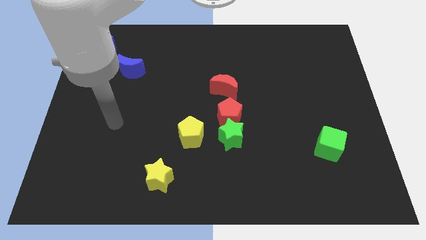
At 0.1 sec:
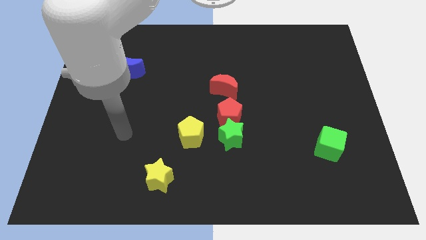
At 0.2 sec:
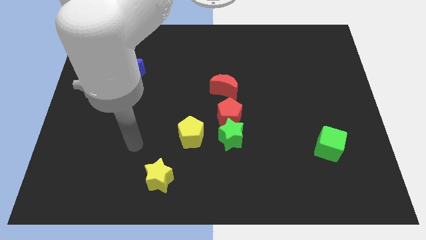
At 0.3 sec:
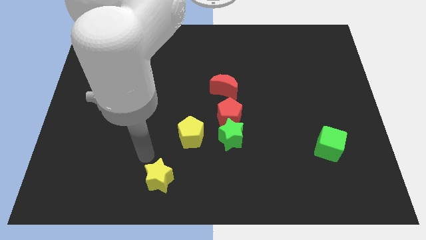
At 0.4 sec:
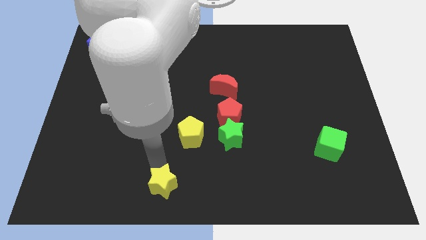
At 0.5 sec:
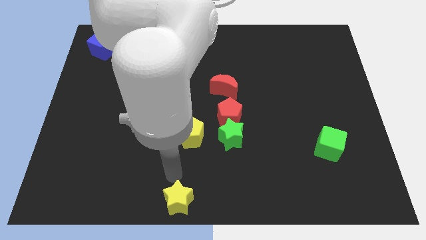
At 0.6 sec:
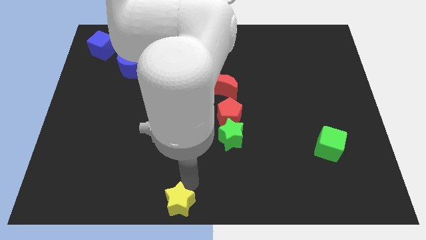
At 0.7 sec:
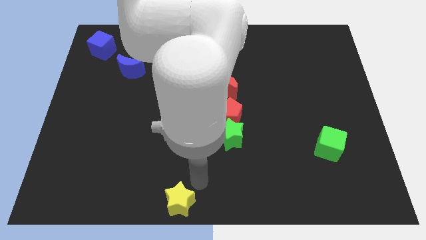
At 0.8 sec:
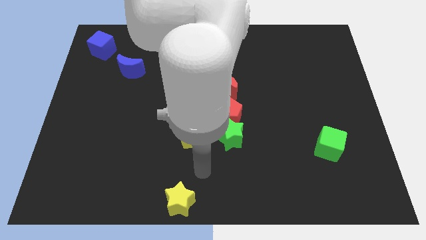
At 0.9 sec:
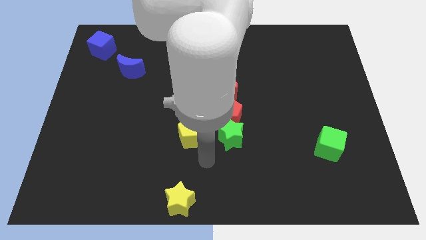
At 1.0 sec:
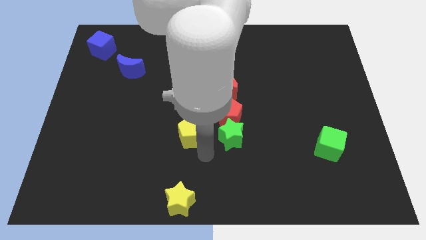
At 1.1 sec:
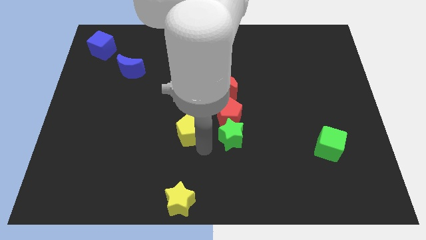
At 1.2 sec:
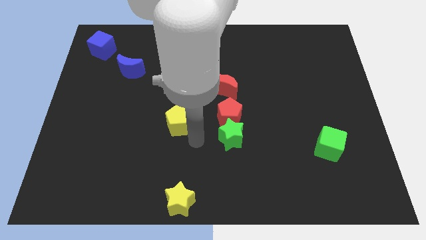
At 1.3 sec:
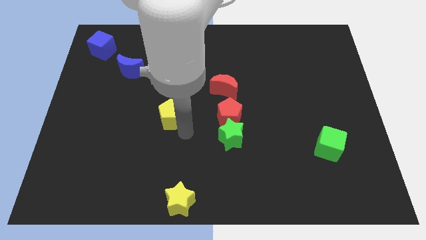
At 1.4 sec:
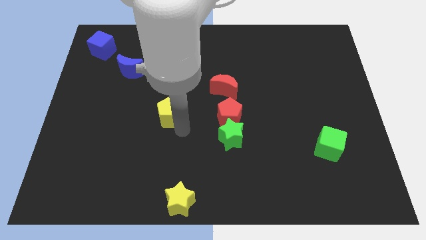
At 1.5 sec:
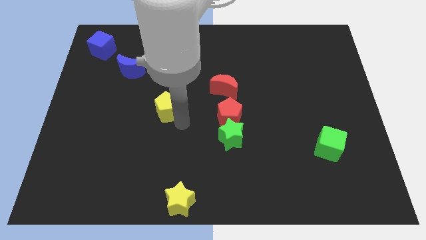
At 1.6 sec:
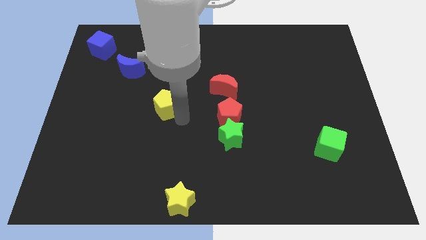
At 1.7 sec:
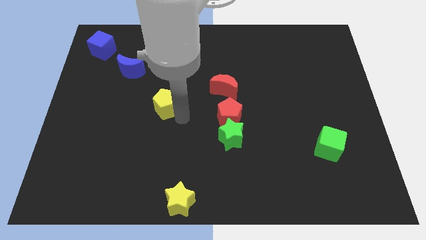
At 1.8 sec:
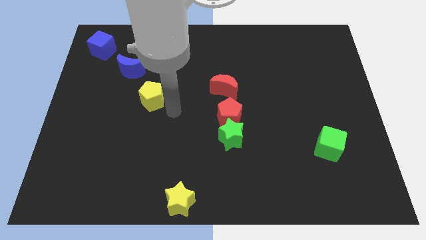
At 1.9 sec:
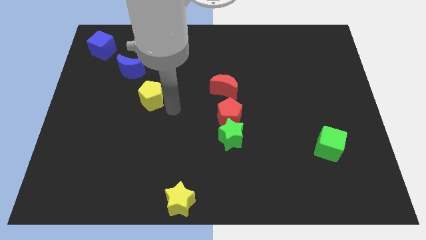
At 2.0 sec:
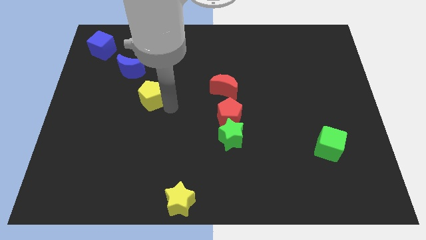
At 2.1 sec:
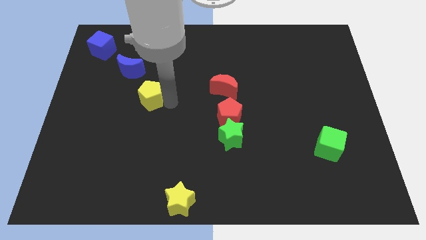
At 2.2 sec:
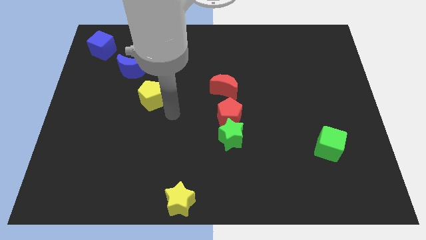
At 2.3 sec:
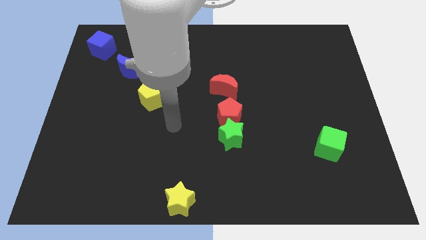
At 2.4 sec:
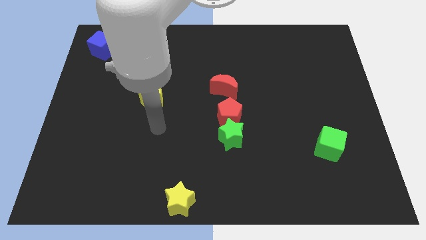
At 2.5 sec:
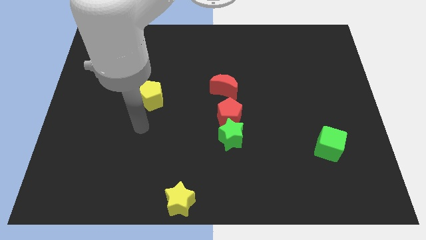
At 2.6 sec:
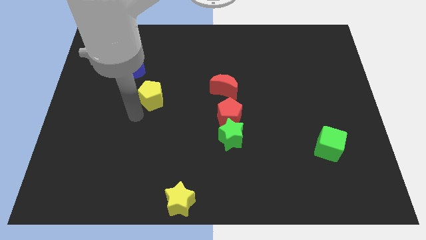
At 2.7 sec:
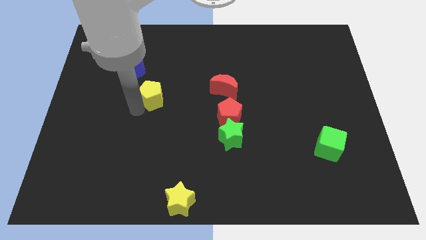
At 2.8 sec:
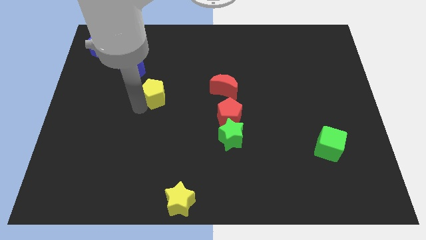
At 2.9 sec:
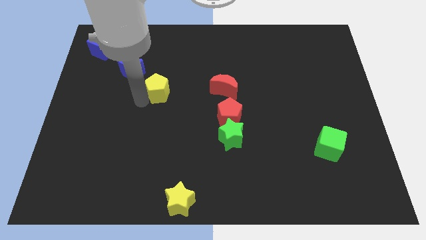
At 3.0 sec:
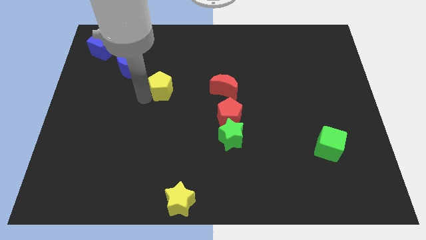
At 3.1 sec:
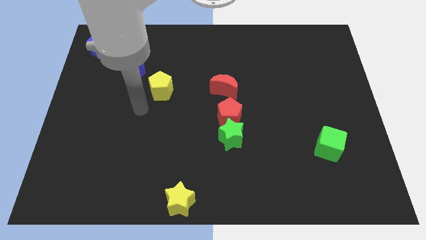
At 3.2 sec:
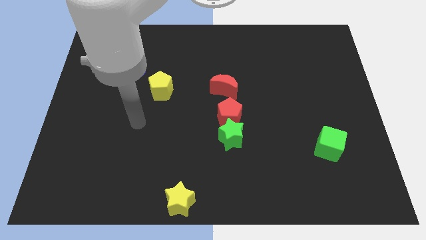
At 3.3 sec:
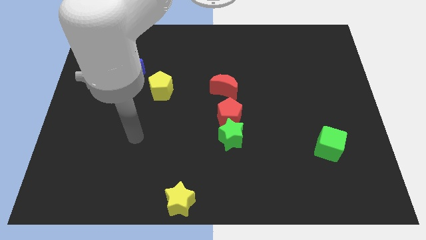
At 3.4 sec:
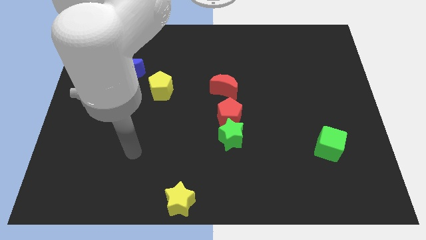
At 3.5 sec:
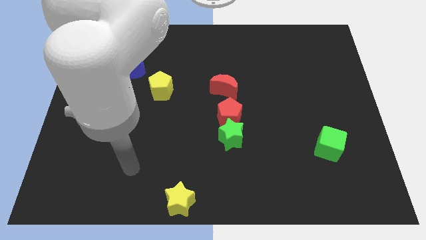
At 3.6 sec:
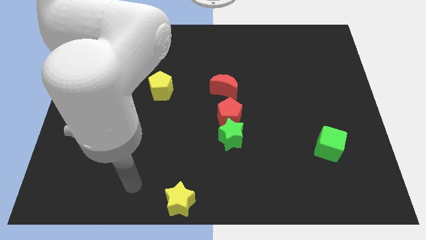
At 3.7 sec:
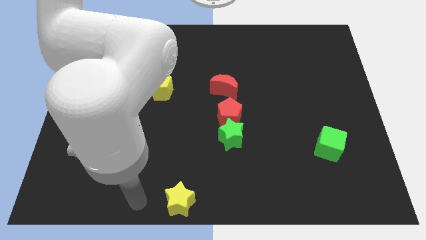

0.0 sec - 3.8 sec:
push the star towards the bottom center

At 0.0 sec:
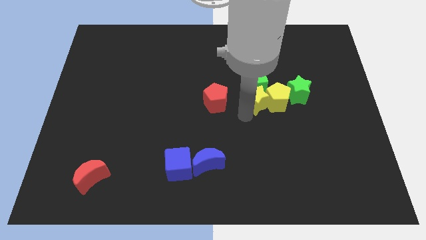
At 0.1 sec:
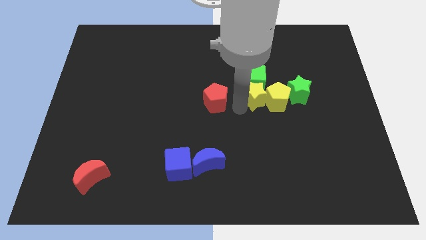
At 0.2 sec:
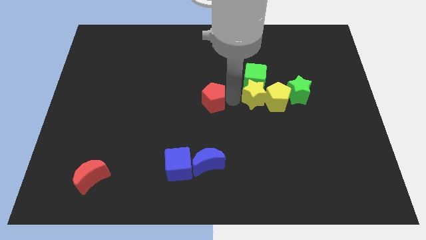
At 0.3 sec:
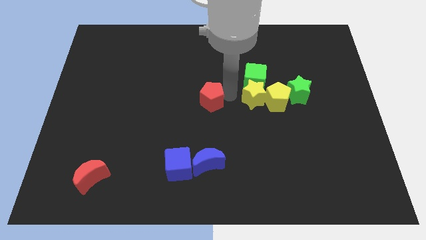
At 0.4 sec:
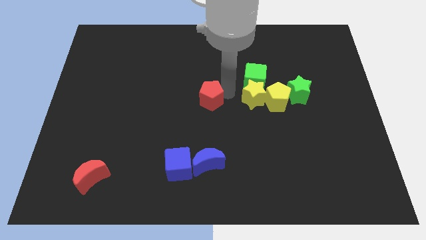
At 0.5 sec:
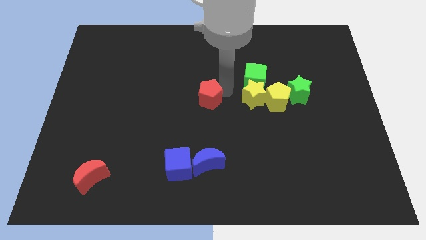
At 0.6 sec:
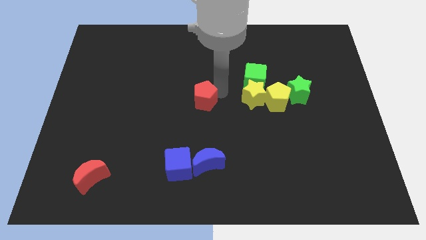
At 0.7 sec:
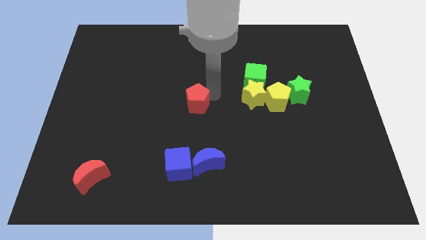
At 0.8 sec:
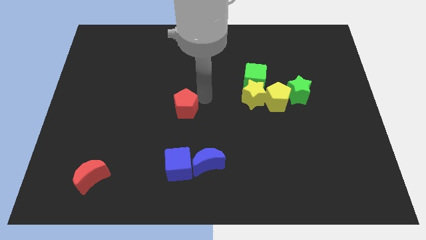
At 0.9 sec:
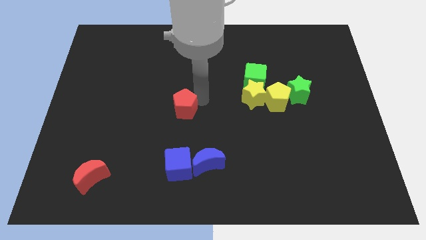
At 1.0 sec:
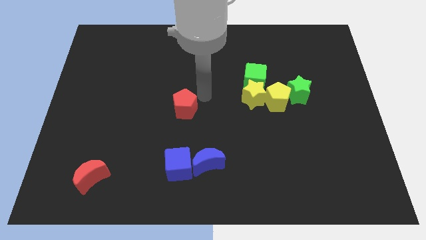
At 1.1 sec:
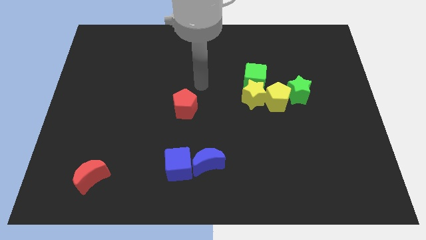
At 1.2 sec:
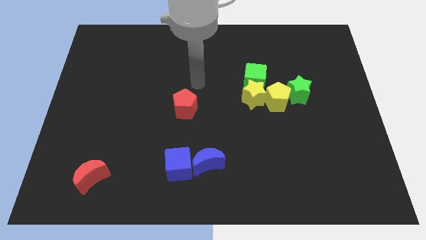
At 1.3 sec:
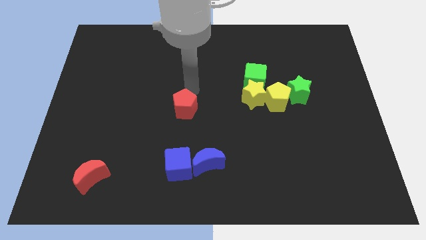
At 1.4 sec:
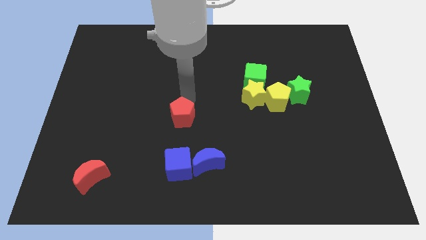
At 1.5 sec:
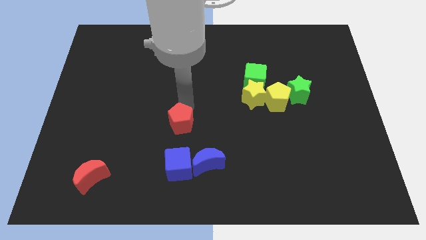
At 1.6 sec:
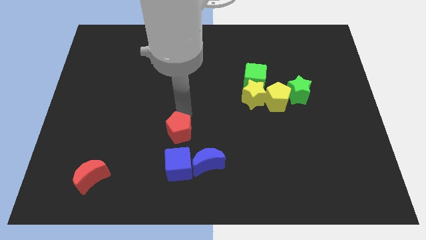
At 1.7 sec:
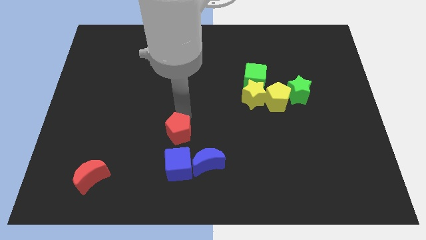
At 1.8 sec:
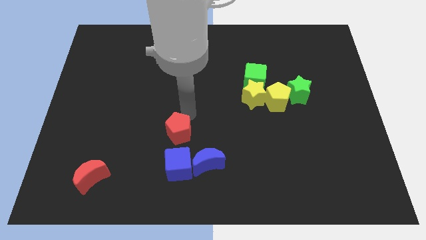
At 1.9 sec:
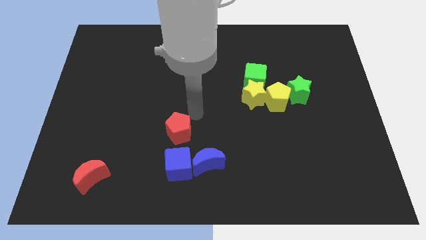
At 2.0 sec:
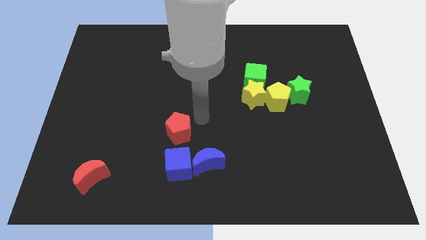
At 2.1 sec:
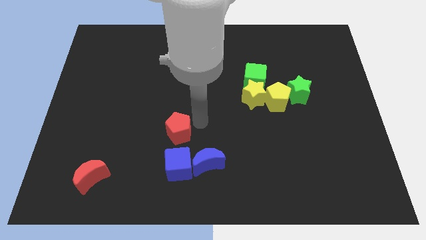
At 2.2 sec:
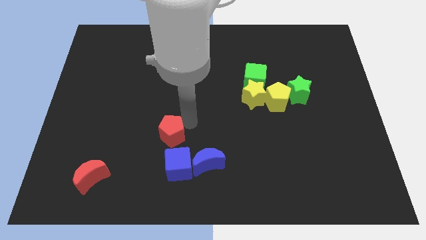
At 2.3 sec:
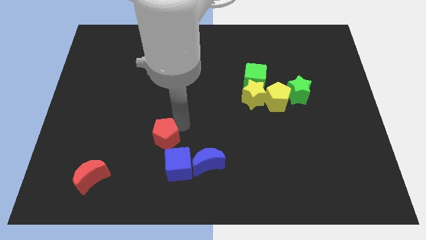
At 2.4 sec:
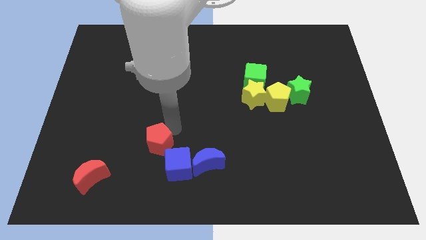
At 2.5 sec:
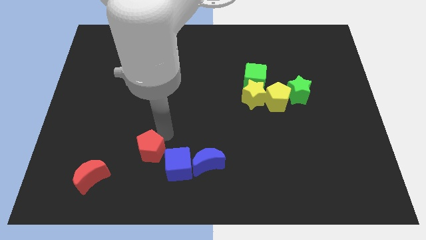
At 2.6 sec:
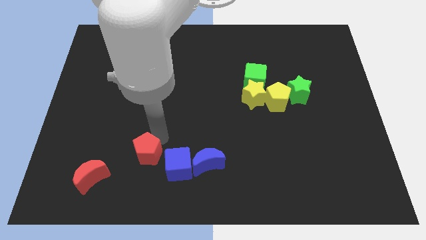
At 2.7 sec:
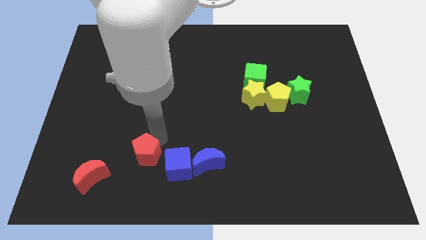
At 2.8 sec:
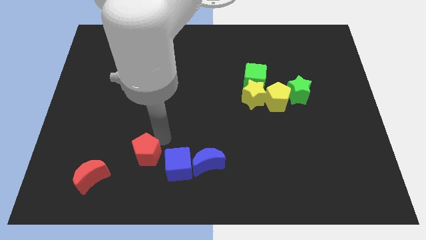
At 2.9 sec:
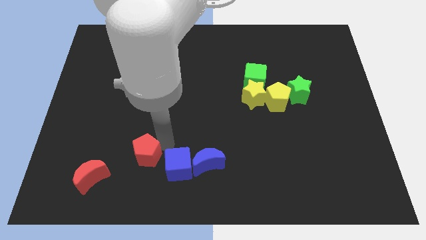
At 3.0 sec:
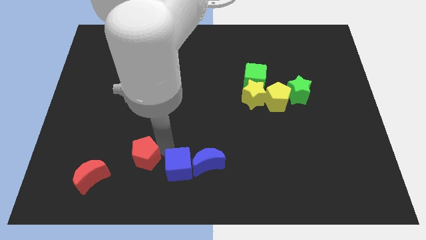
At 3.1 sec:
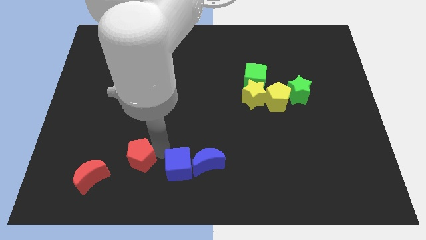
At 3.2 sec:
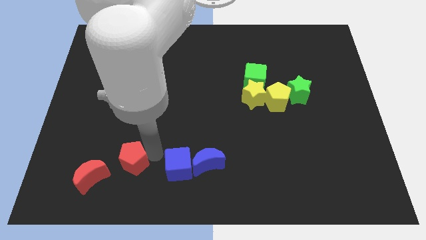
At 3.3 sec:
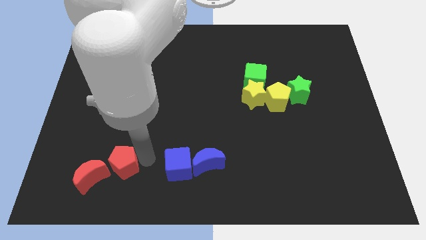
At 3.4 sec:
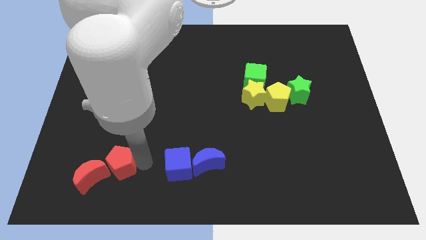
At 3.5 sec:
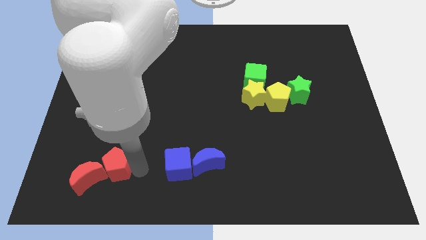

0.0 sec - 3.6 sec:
push the red pentagon into red moon

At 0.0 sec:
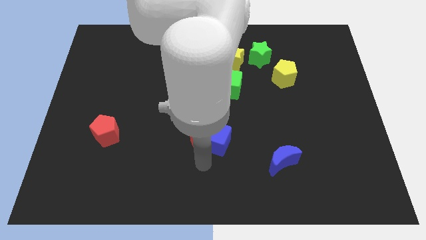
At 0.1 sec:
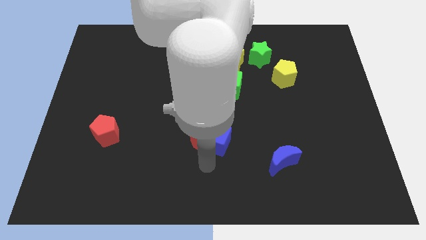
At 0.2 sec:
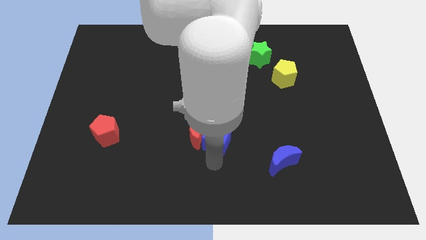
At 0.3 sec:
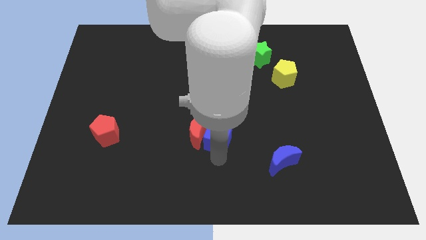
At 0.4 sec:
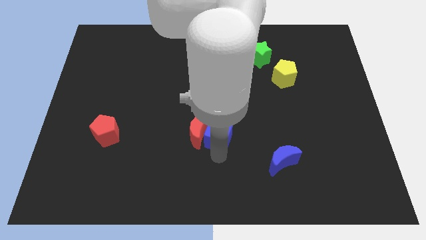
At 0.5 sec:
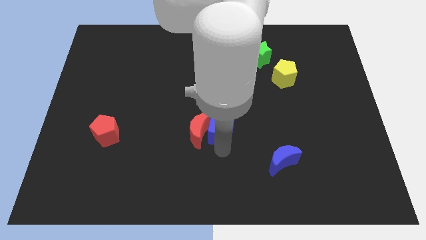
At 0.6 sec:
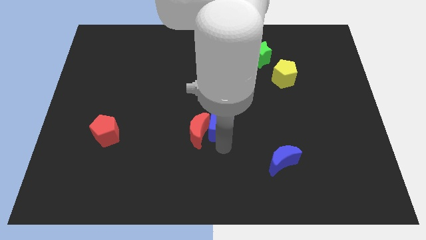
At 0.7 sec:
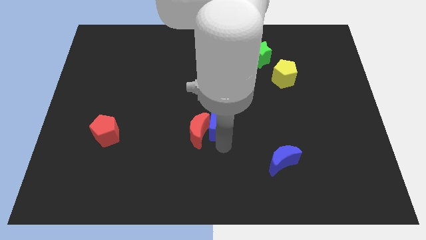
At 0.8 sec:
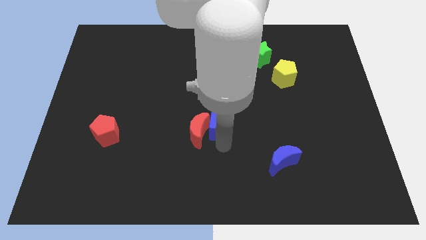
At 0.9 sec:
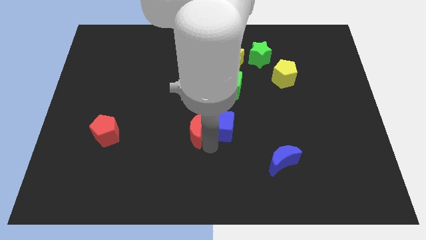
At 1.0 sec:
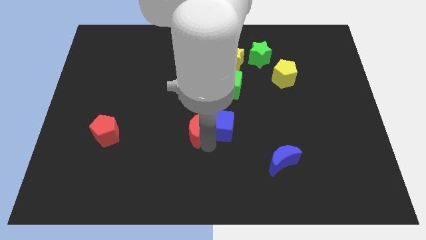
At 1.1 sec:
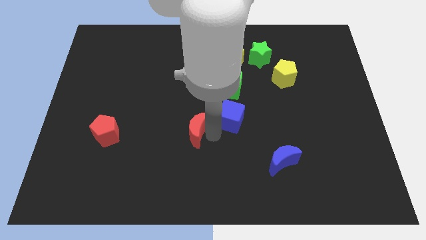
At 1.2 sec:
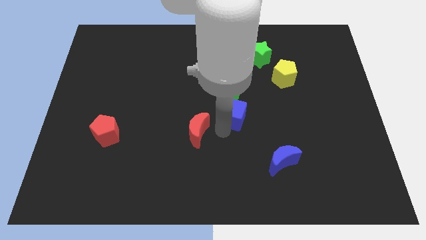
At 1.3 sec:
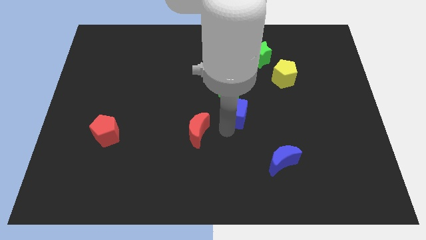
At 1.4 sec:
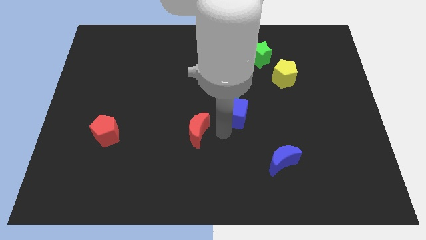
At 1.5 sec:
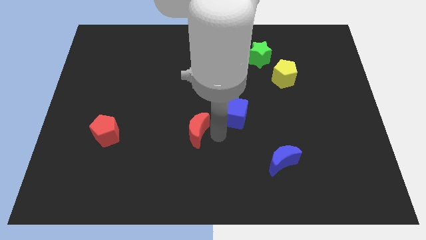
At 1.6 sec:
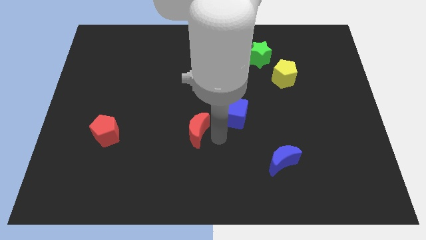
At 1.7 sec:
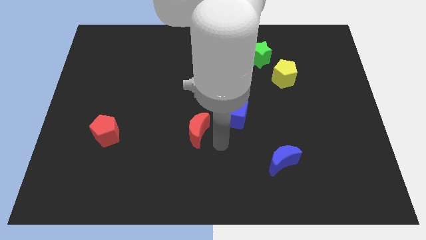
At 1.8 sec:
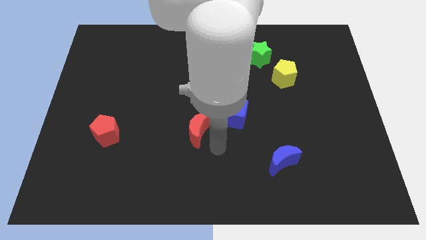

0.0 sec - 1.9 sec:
separate the blue cube from the red moon
